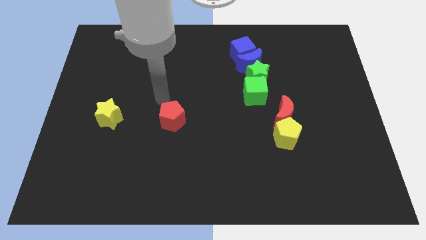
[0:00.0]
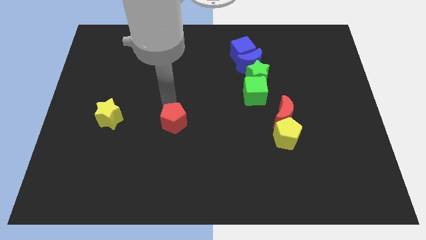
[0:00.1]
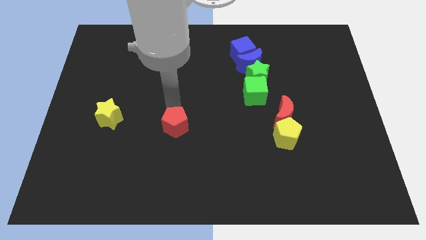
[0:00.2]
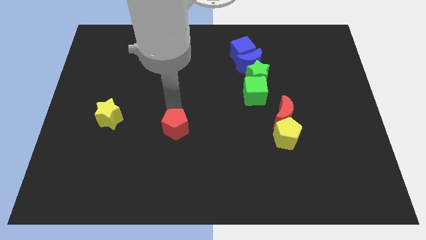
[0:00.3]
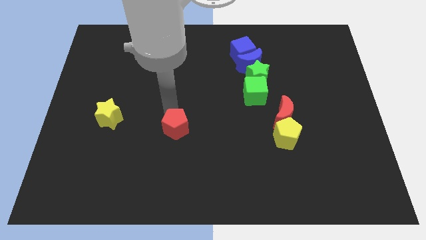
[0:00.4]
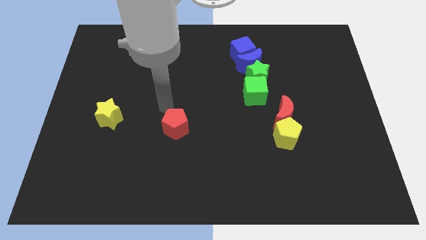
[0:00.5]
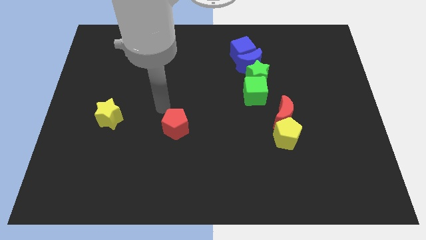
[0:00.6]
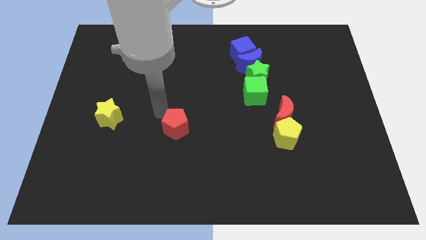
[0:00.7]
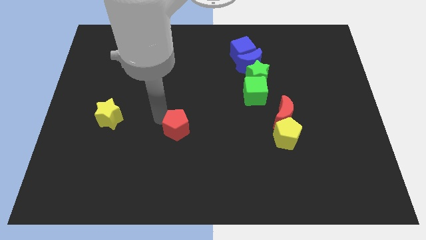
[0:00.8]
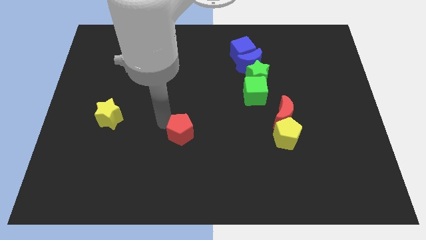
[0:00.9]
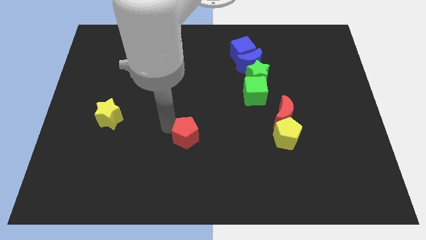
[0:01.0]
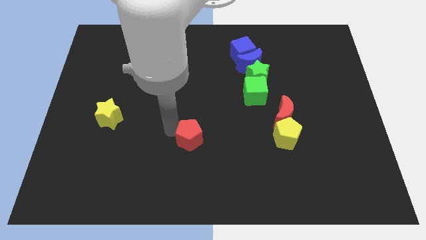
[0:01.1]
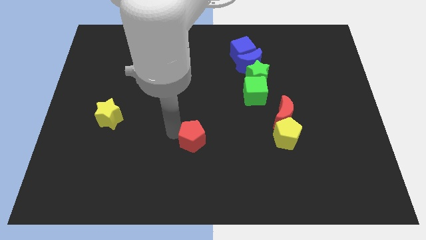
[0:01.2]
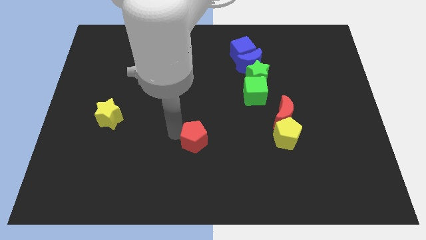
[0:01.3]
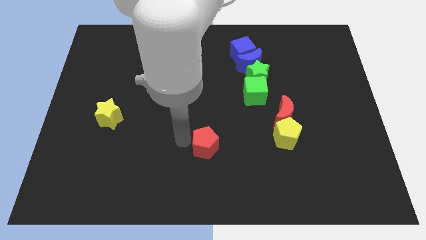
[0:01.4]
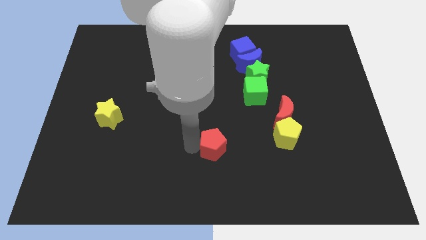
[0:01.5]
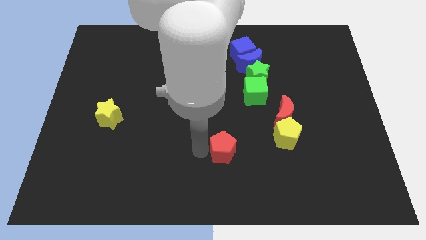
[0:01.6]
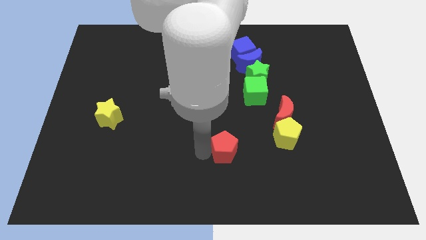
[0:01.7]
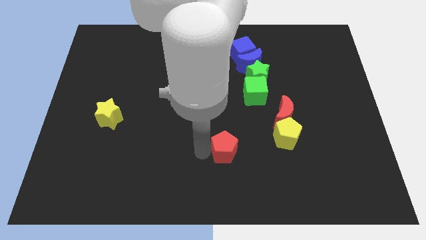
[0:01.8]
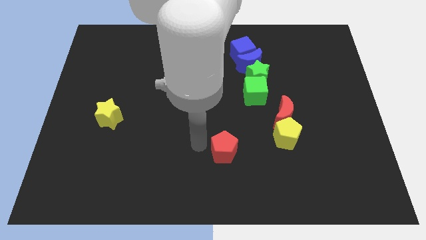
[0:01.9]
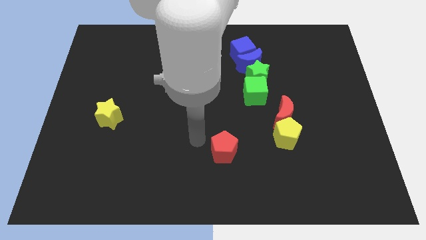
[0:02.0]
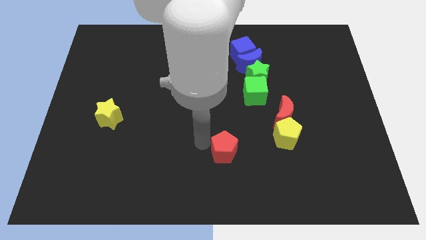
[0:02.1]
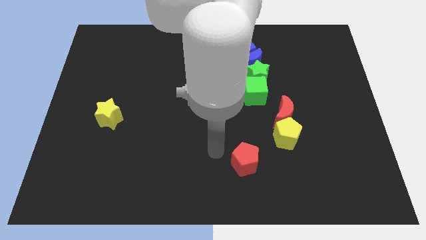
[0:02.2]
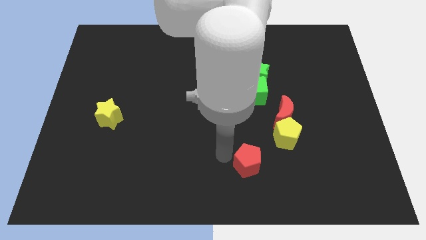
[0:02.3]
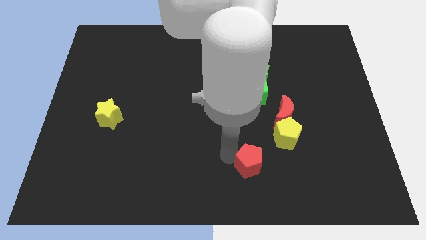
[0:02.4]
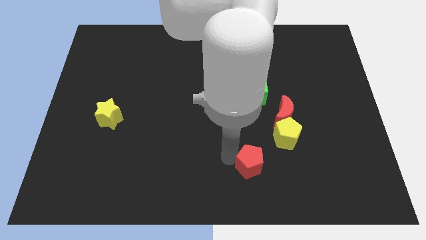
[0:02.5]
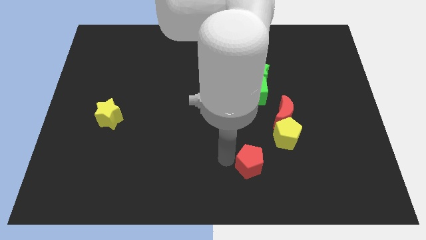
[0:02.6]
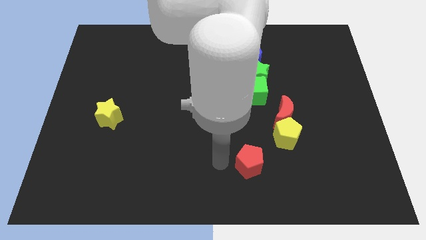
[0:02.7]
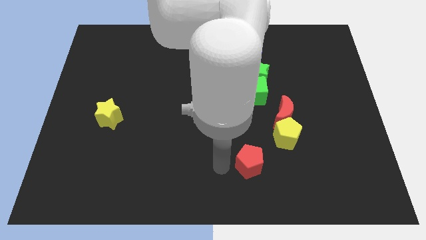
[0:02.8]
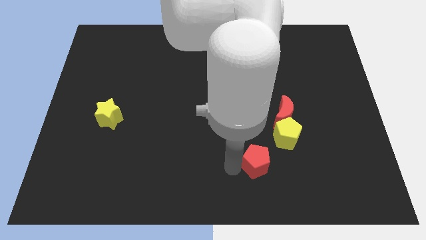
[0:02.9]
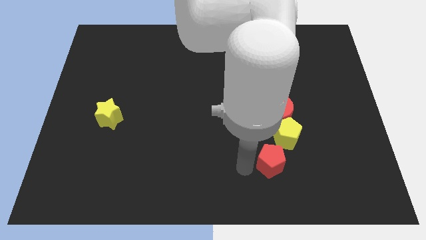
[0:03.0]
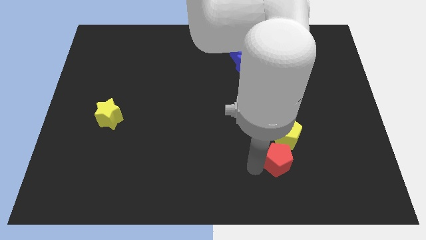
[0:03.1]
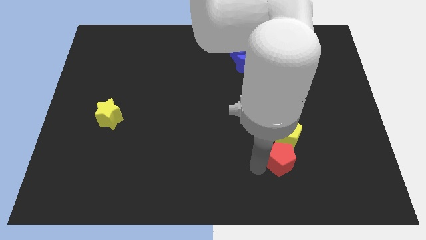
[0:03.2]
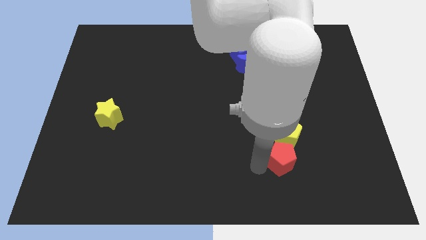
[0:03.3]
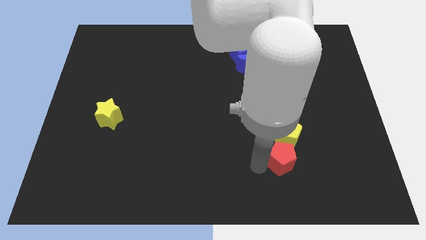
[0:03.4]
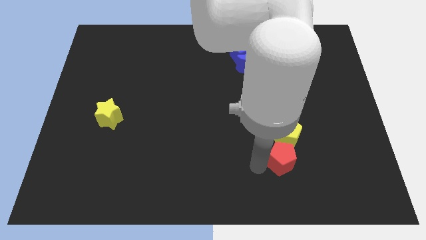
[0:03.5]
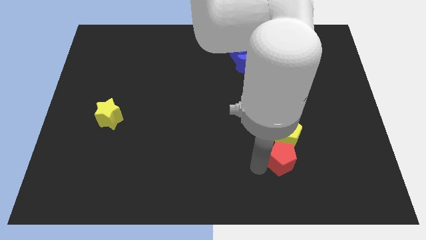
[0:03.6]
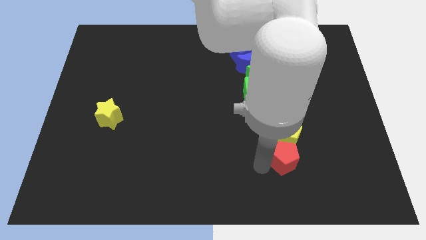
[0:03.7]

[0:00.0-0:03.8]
push the red pentagon to the bottom of the yellow pentagon

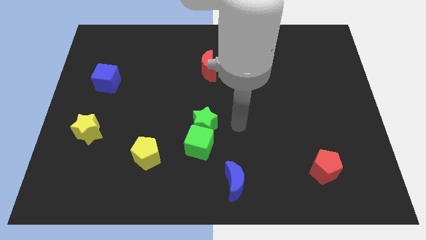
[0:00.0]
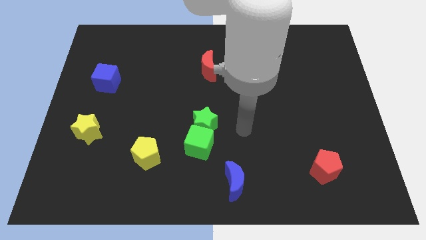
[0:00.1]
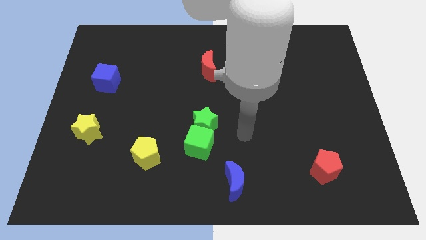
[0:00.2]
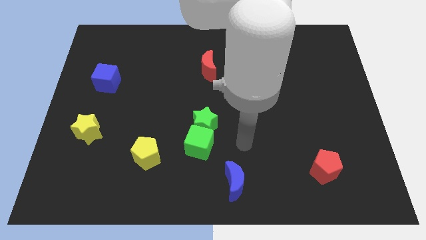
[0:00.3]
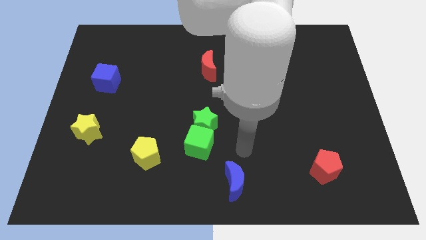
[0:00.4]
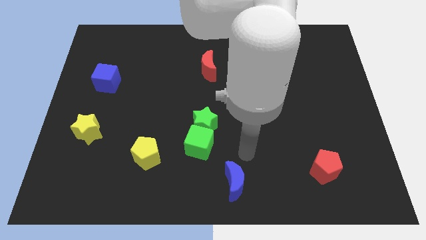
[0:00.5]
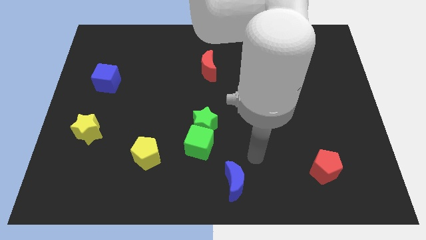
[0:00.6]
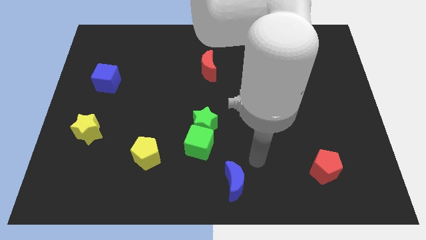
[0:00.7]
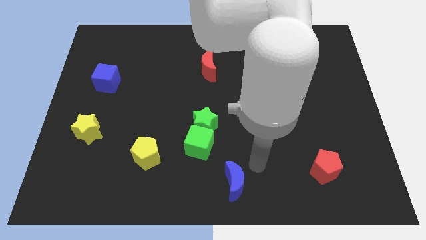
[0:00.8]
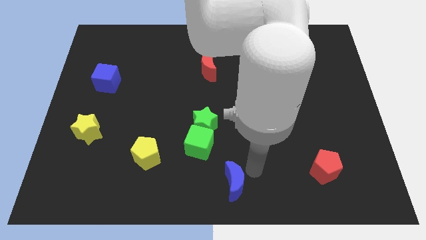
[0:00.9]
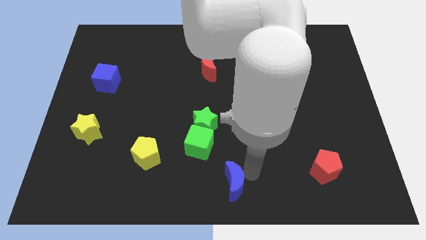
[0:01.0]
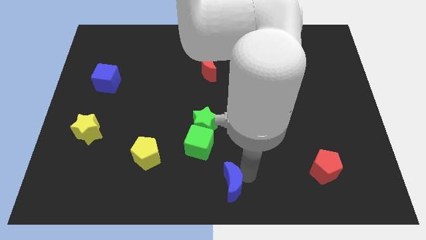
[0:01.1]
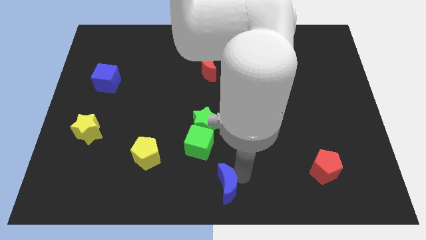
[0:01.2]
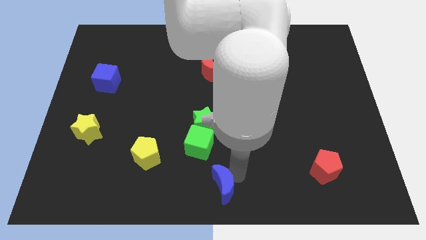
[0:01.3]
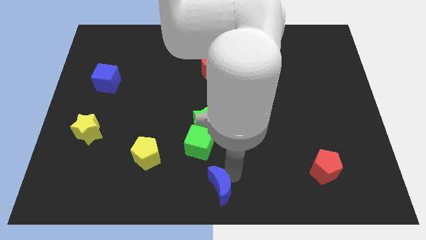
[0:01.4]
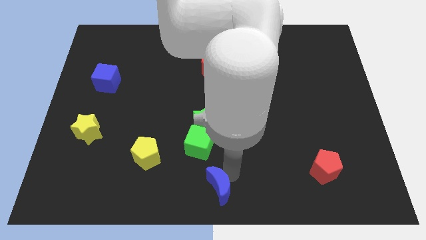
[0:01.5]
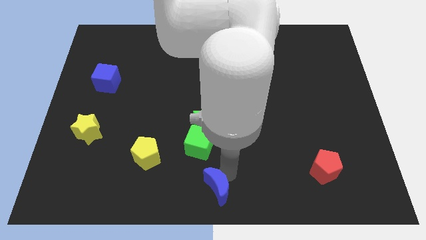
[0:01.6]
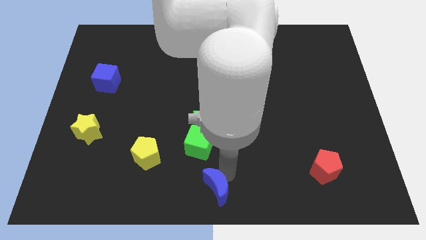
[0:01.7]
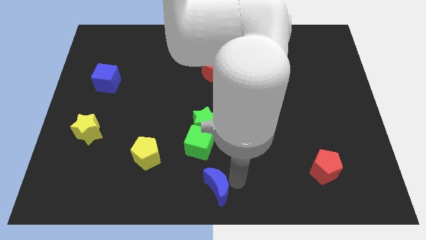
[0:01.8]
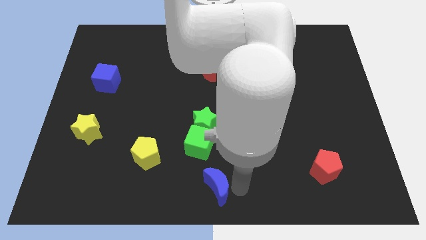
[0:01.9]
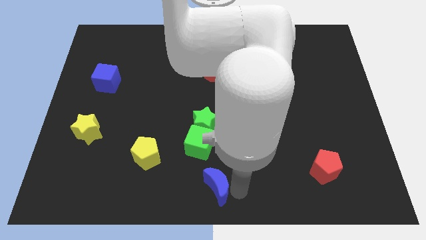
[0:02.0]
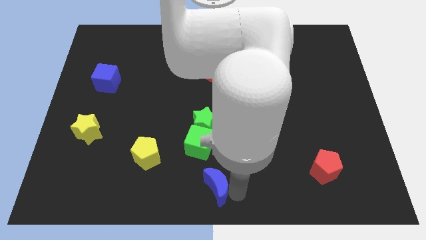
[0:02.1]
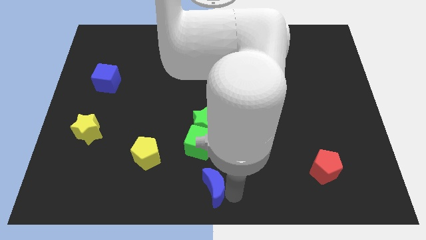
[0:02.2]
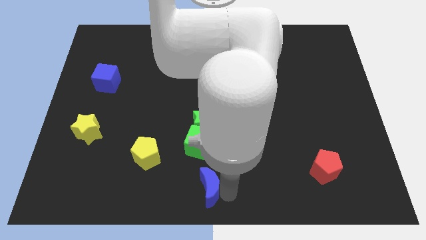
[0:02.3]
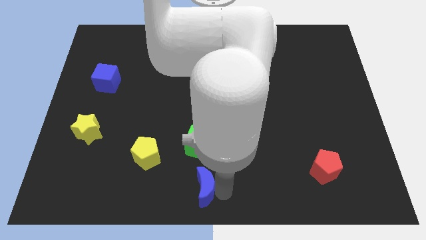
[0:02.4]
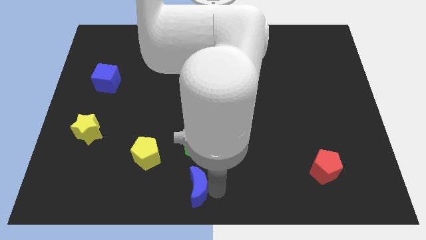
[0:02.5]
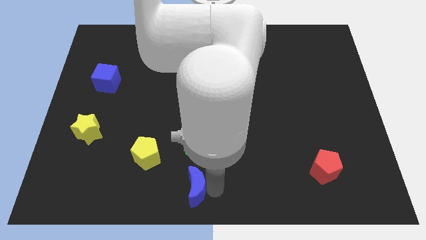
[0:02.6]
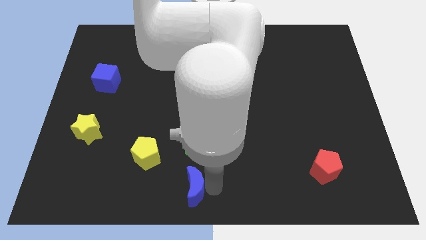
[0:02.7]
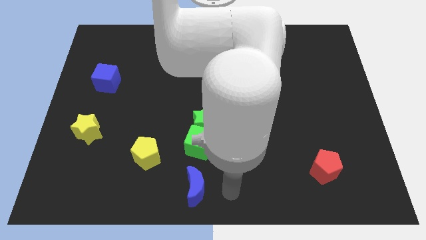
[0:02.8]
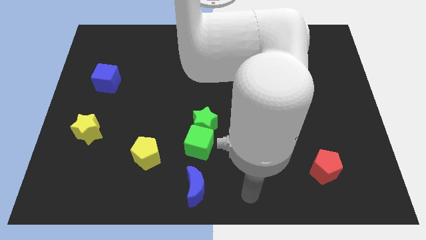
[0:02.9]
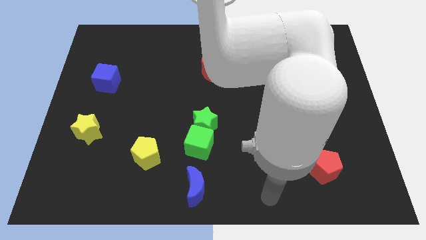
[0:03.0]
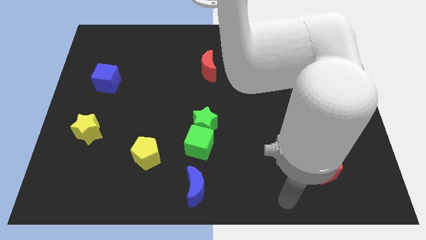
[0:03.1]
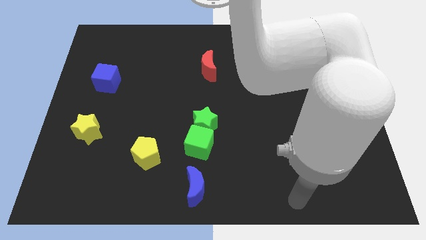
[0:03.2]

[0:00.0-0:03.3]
move the blue crescent below the green cube

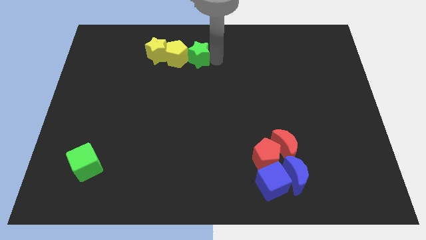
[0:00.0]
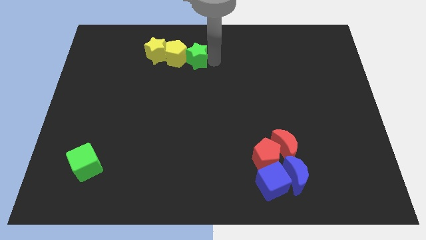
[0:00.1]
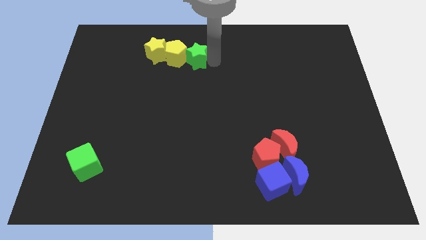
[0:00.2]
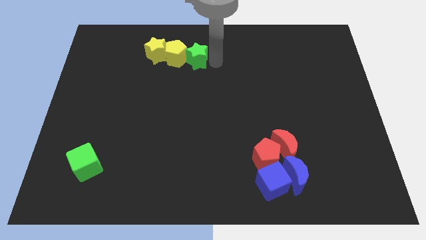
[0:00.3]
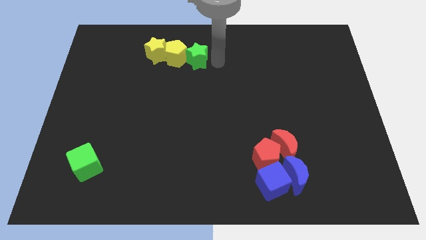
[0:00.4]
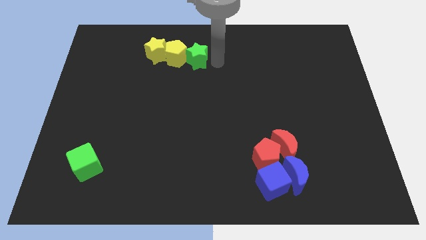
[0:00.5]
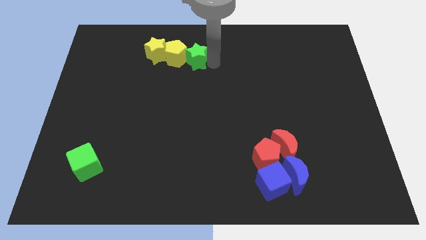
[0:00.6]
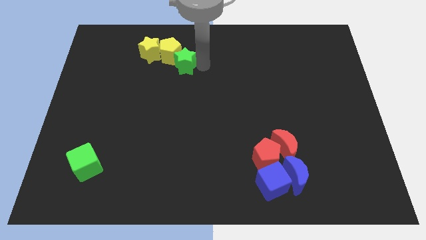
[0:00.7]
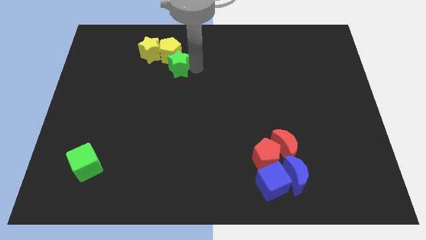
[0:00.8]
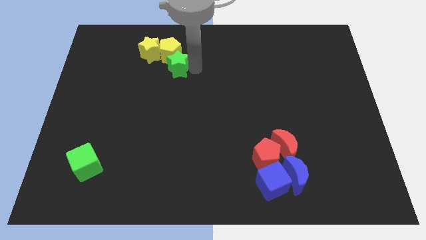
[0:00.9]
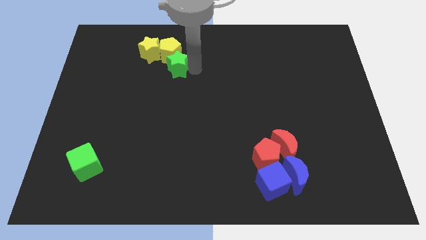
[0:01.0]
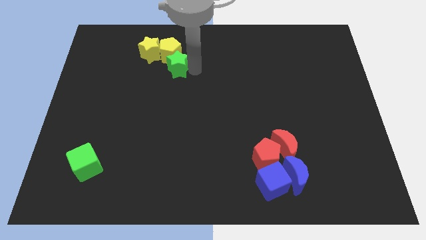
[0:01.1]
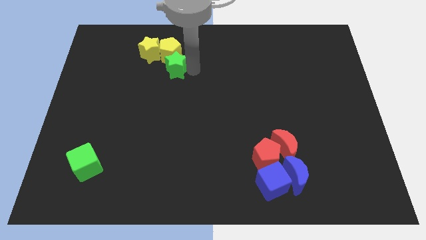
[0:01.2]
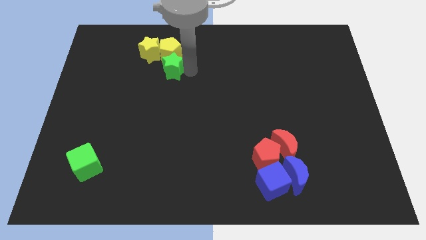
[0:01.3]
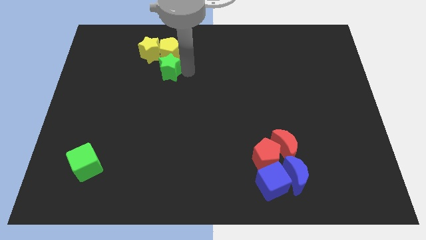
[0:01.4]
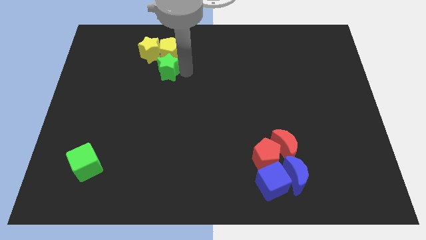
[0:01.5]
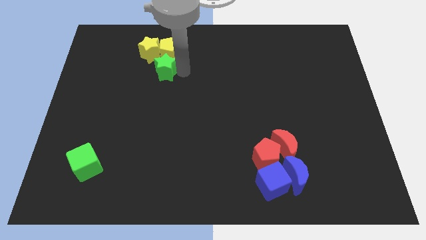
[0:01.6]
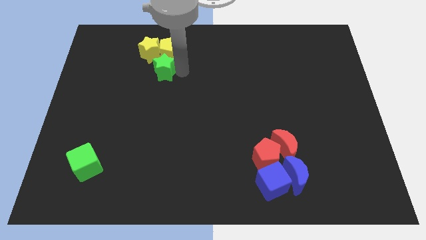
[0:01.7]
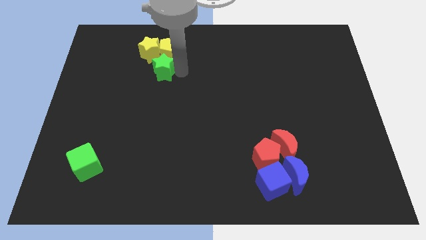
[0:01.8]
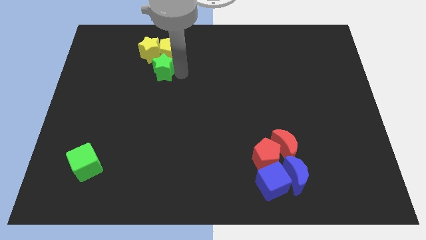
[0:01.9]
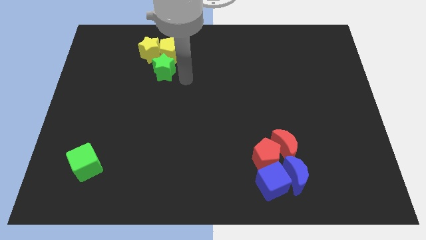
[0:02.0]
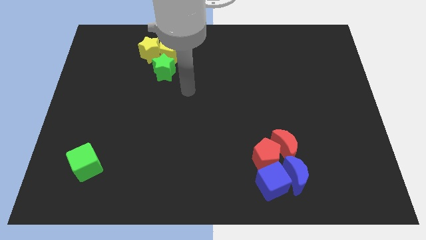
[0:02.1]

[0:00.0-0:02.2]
place the green star below yellow blocks
